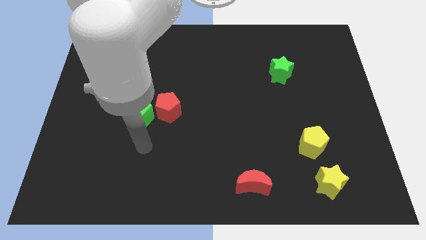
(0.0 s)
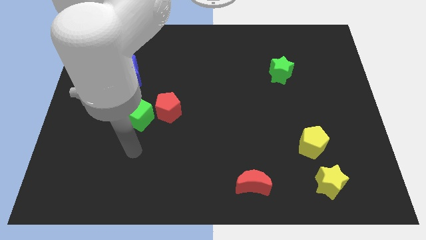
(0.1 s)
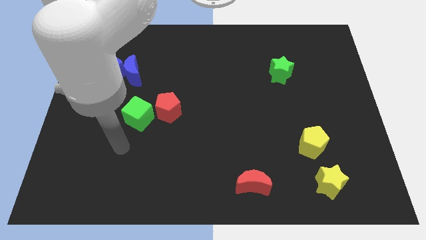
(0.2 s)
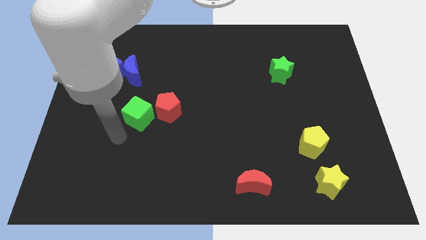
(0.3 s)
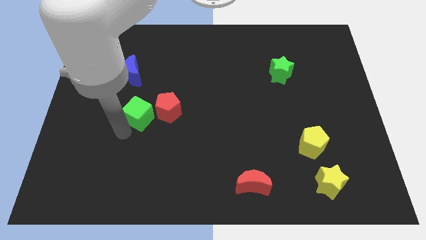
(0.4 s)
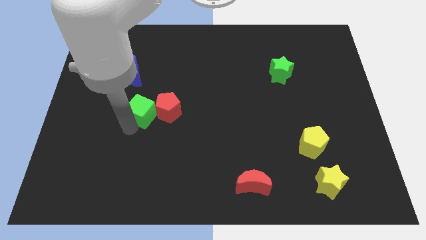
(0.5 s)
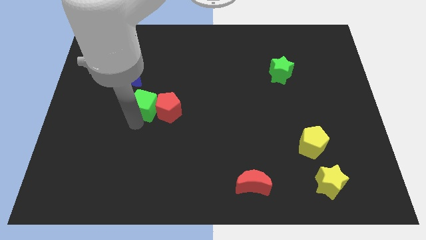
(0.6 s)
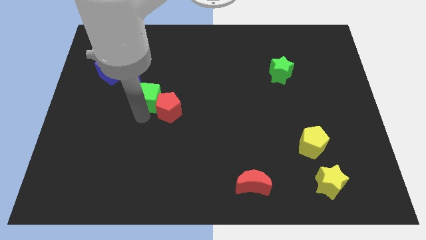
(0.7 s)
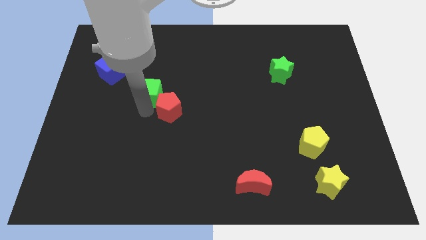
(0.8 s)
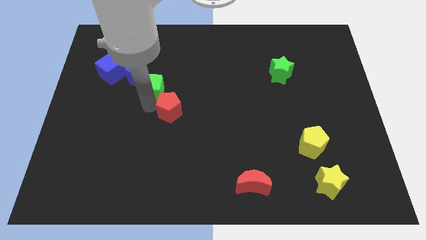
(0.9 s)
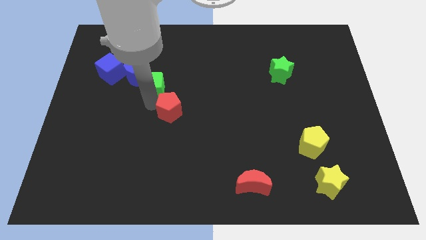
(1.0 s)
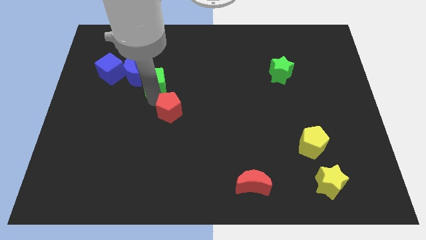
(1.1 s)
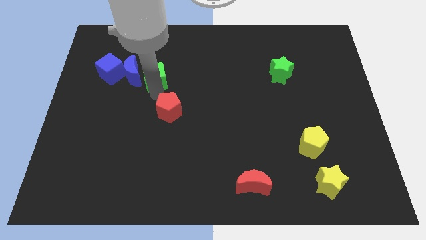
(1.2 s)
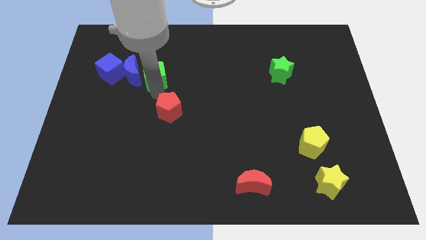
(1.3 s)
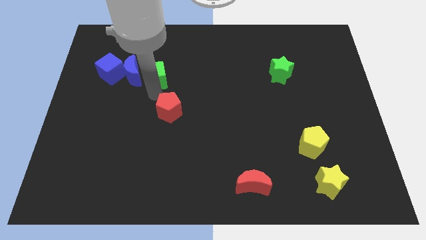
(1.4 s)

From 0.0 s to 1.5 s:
place the green cube right to the blue crescent to form a horizontal line

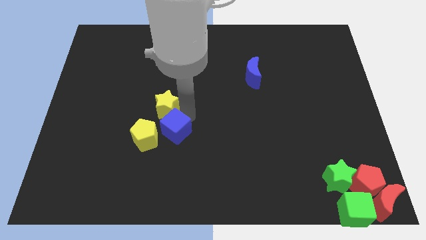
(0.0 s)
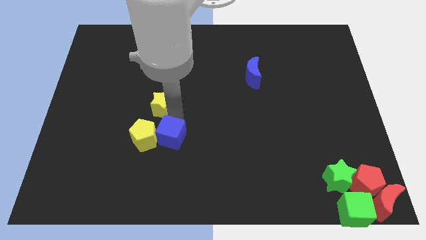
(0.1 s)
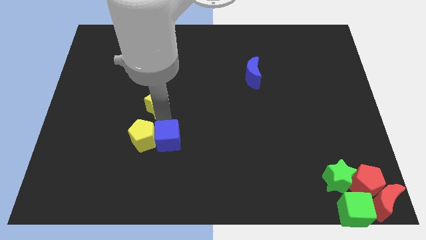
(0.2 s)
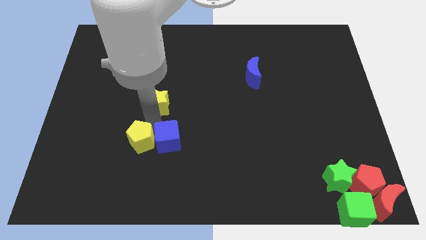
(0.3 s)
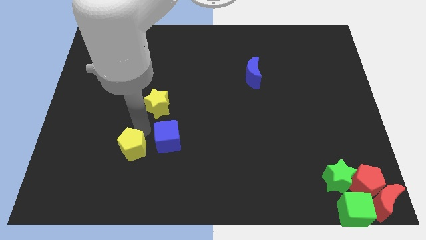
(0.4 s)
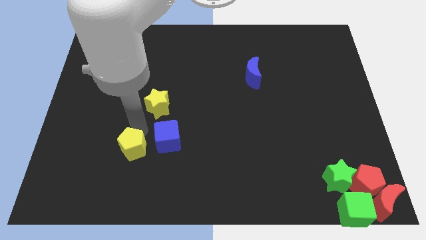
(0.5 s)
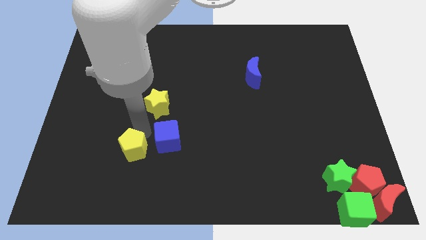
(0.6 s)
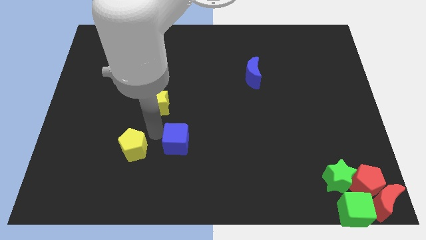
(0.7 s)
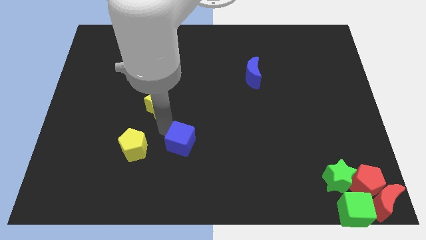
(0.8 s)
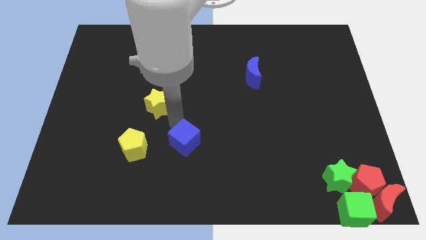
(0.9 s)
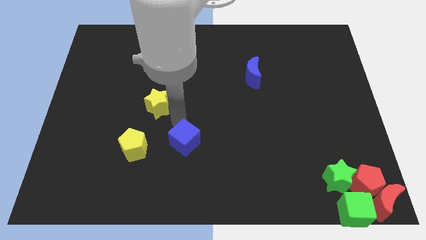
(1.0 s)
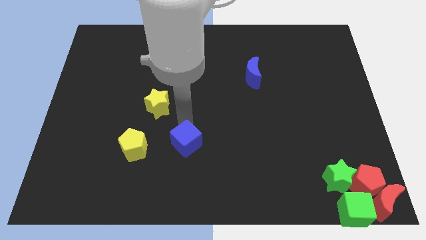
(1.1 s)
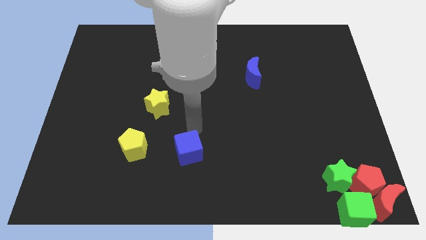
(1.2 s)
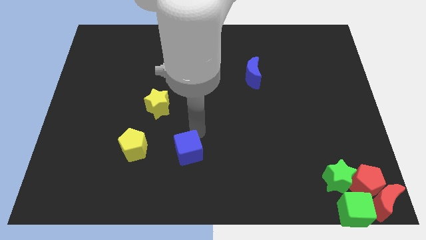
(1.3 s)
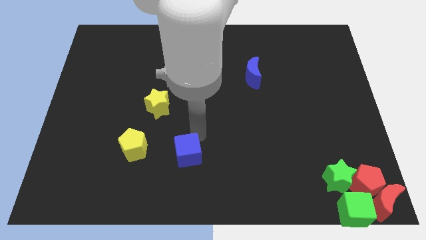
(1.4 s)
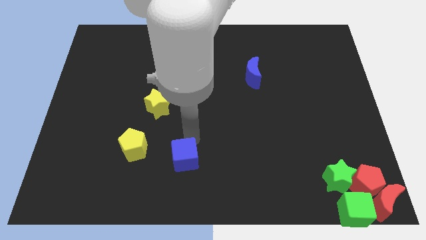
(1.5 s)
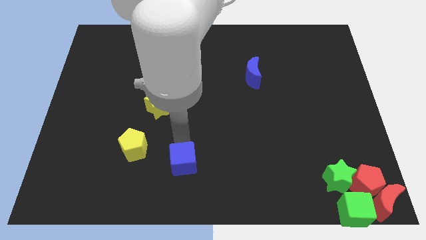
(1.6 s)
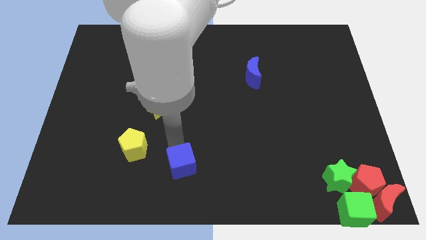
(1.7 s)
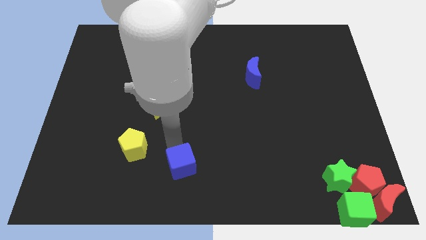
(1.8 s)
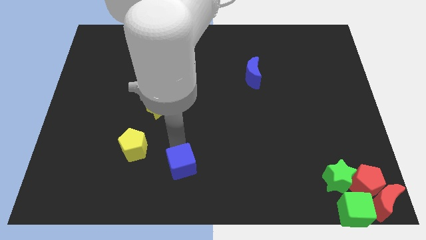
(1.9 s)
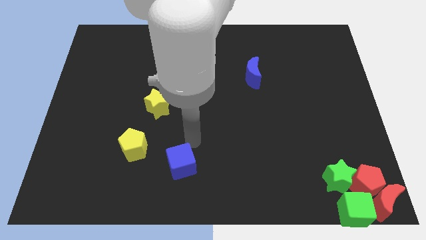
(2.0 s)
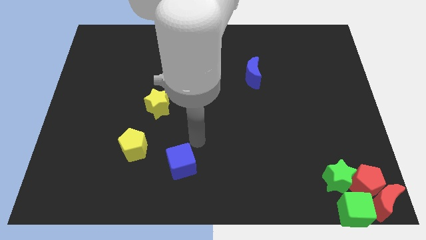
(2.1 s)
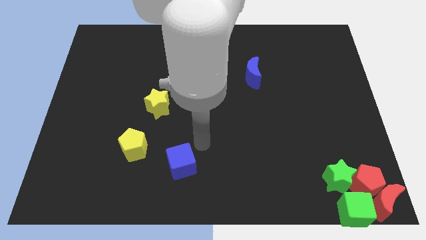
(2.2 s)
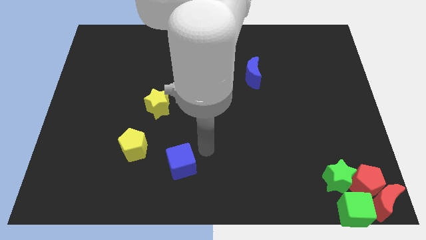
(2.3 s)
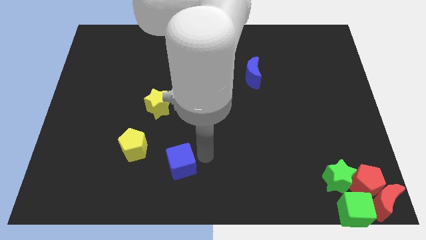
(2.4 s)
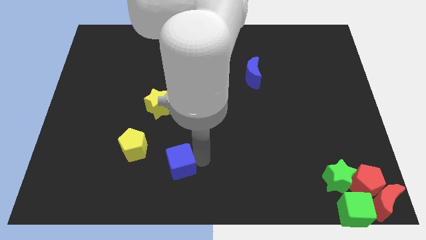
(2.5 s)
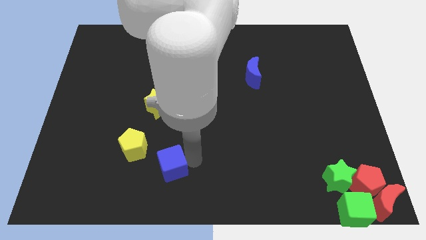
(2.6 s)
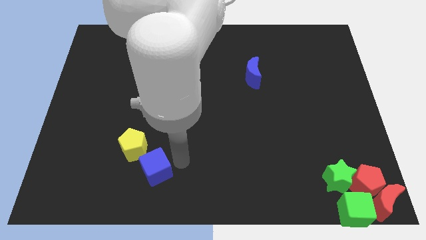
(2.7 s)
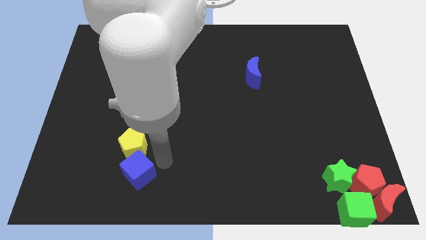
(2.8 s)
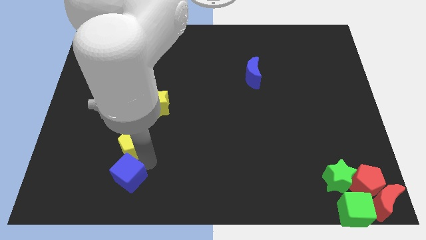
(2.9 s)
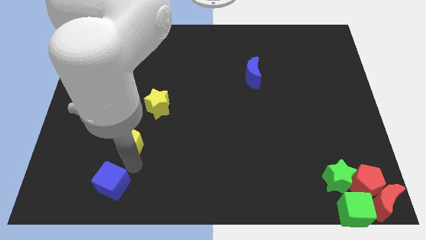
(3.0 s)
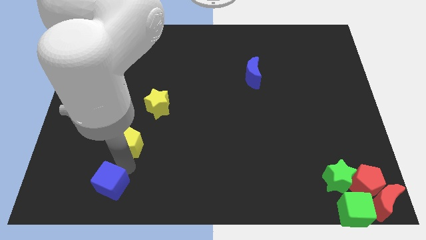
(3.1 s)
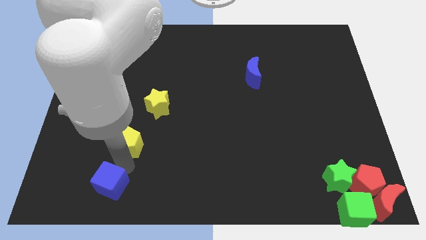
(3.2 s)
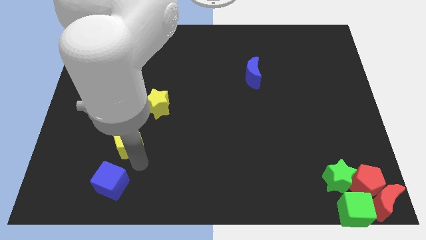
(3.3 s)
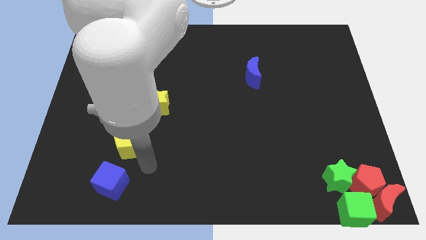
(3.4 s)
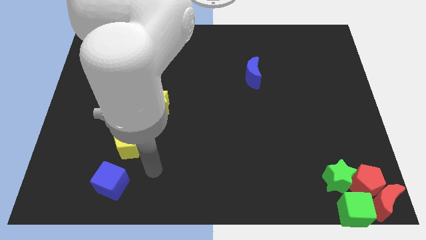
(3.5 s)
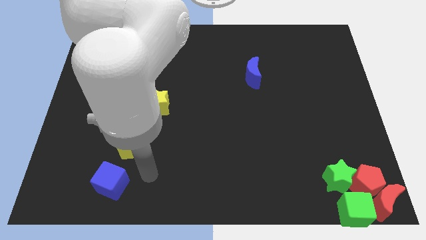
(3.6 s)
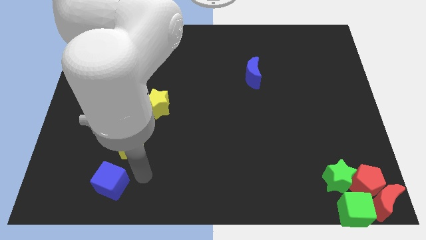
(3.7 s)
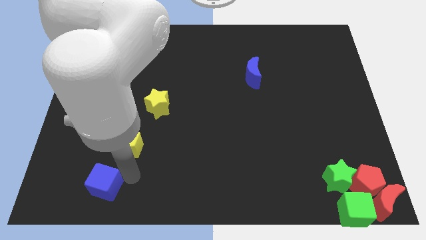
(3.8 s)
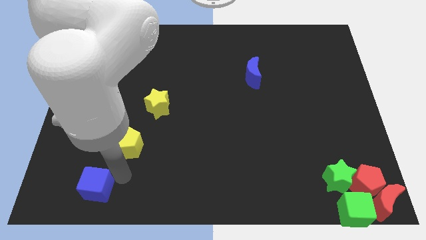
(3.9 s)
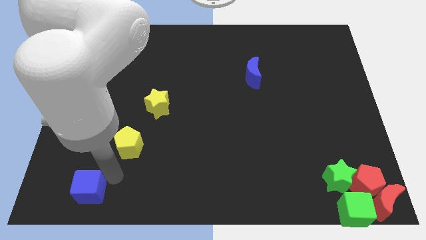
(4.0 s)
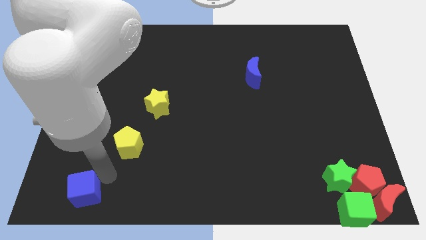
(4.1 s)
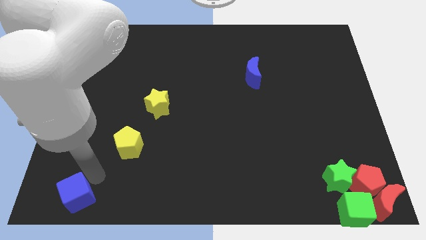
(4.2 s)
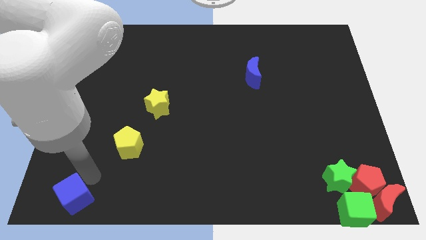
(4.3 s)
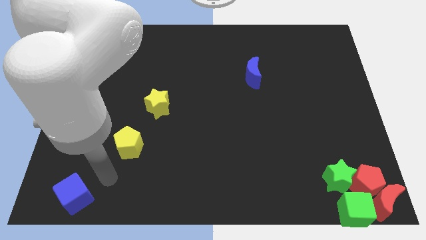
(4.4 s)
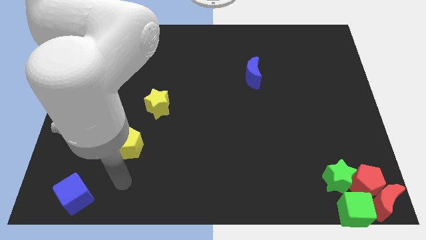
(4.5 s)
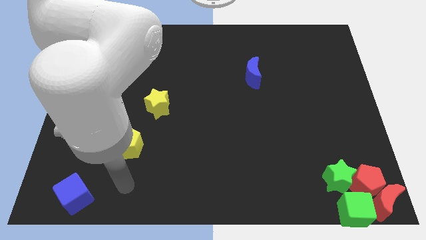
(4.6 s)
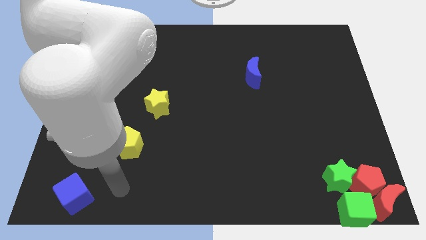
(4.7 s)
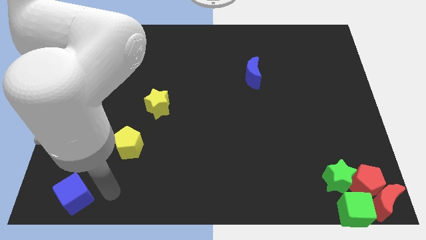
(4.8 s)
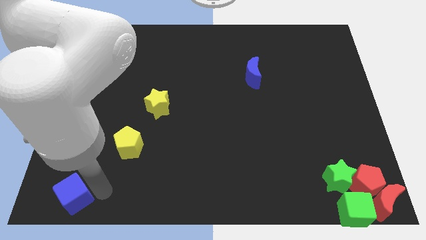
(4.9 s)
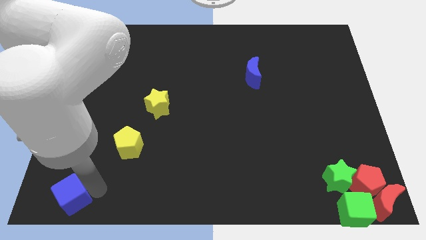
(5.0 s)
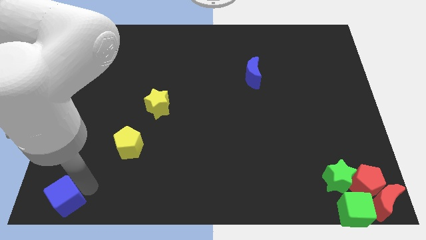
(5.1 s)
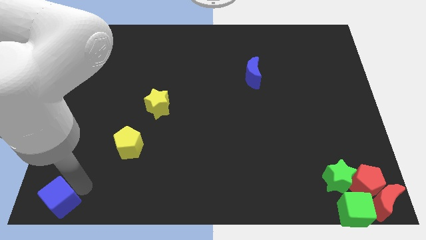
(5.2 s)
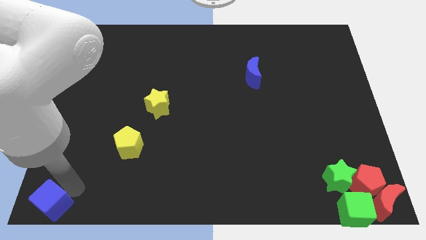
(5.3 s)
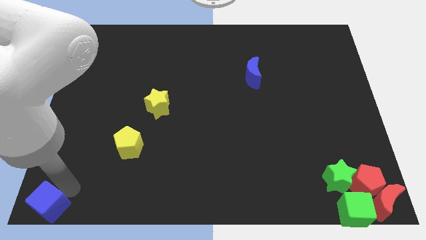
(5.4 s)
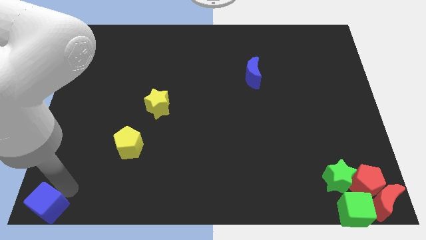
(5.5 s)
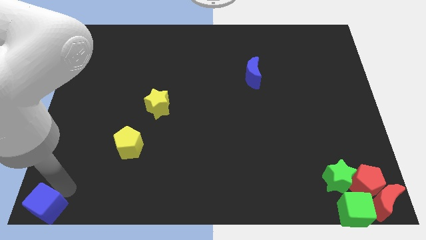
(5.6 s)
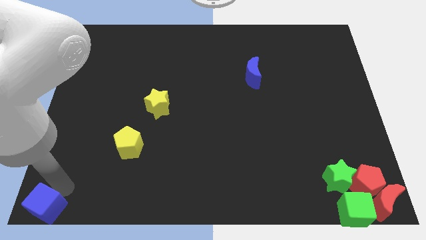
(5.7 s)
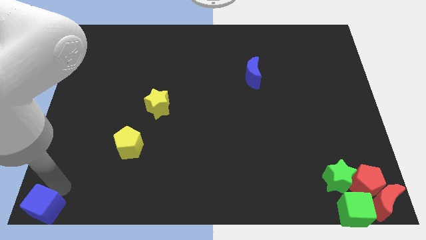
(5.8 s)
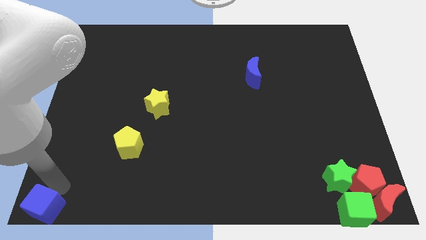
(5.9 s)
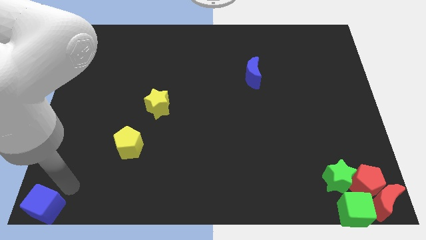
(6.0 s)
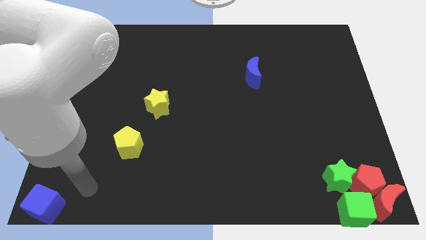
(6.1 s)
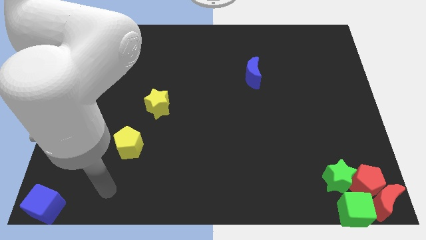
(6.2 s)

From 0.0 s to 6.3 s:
move blue cube to the bottom left corner

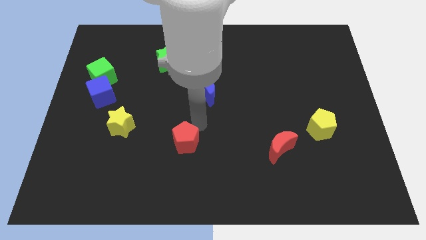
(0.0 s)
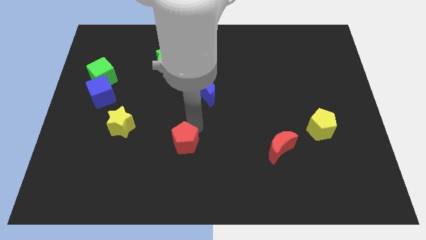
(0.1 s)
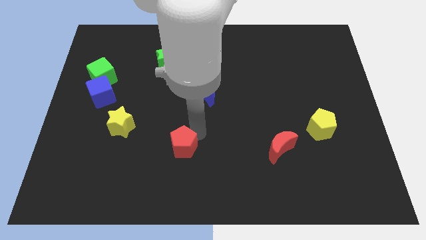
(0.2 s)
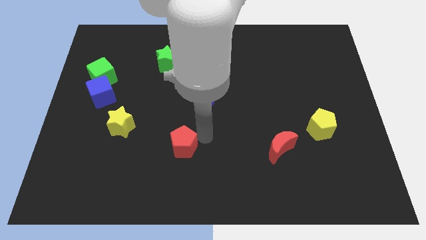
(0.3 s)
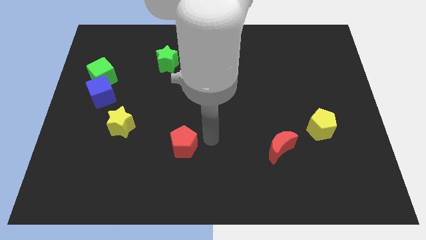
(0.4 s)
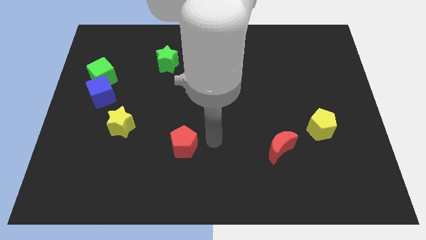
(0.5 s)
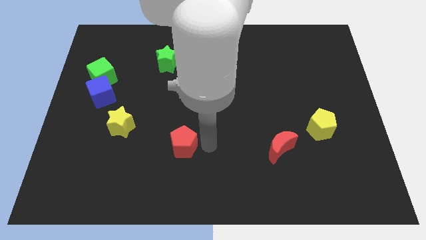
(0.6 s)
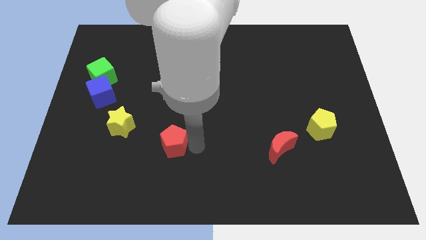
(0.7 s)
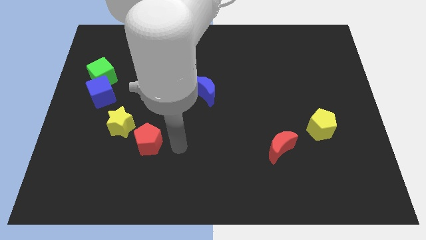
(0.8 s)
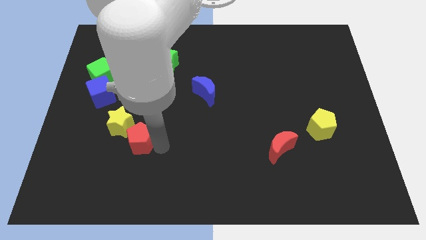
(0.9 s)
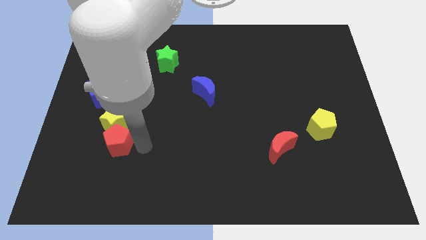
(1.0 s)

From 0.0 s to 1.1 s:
slide red pentagon into yellow star

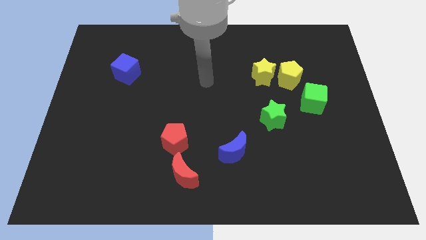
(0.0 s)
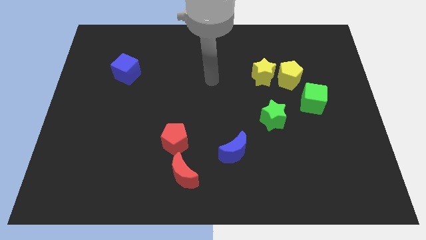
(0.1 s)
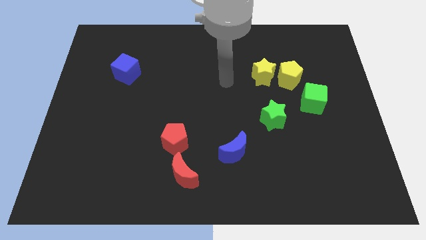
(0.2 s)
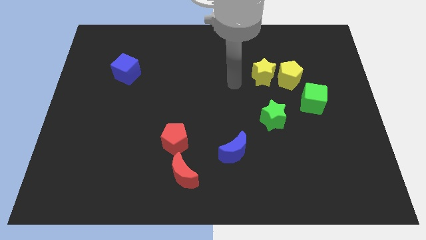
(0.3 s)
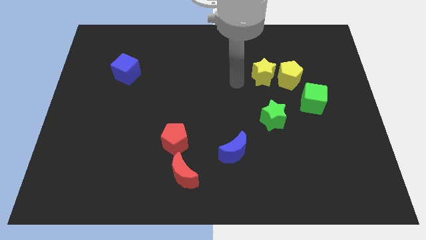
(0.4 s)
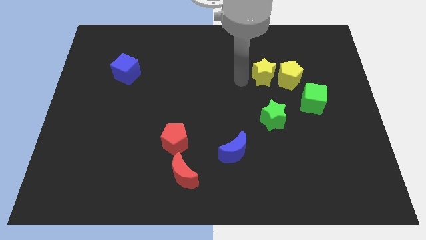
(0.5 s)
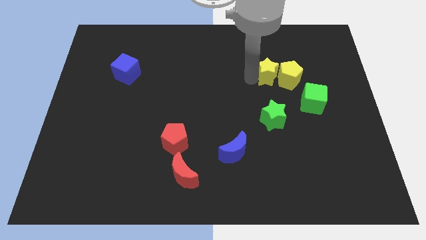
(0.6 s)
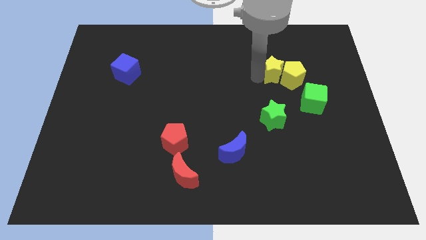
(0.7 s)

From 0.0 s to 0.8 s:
move arm near yellow star
